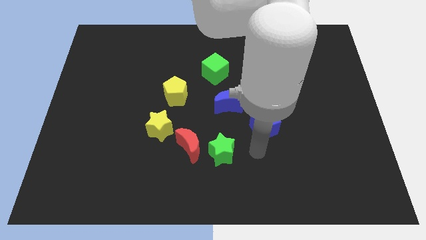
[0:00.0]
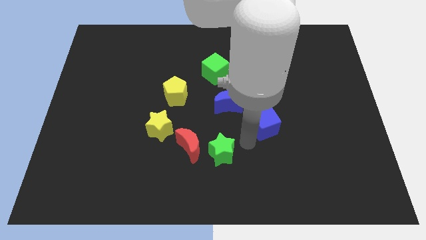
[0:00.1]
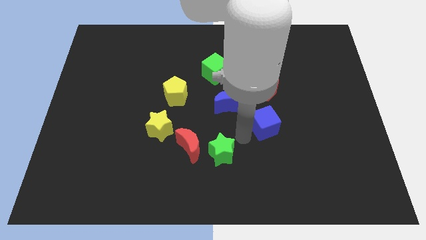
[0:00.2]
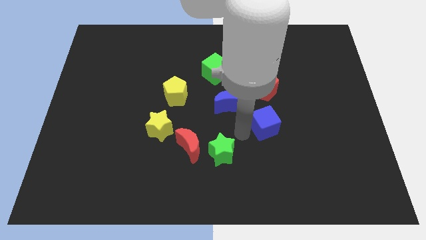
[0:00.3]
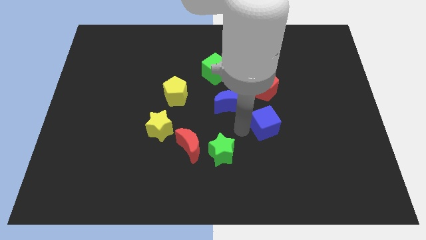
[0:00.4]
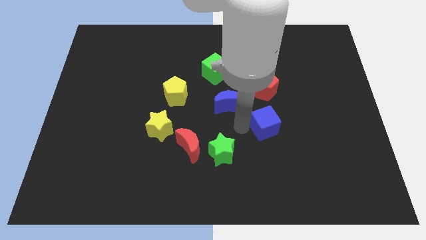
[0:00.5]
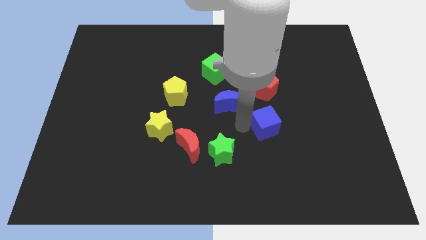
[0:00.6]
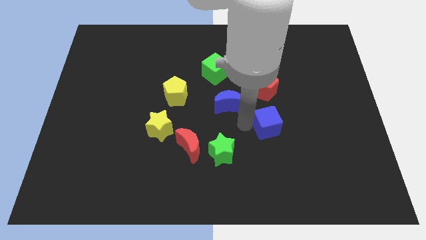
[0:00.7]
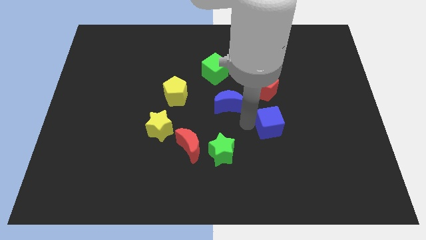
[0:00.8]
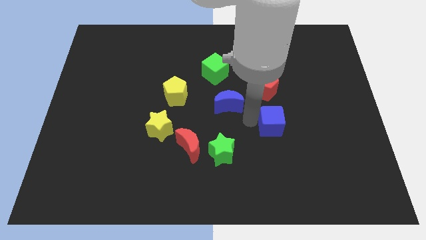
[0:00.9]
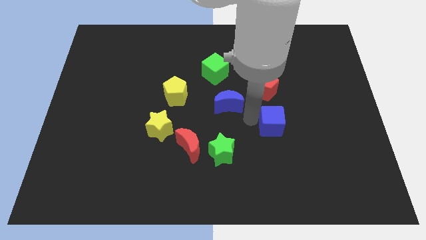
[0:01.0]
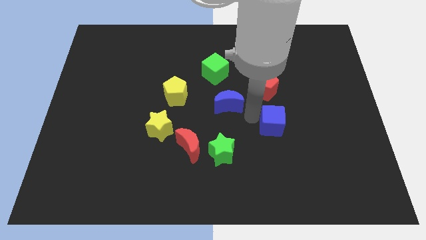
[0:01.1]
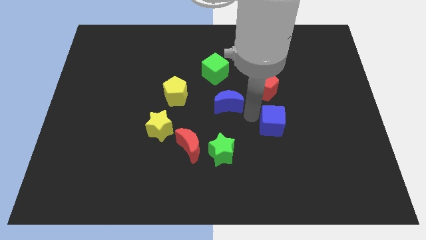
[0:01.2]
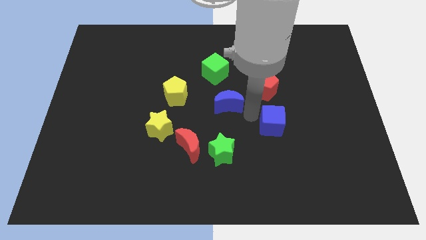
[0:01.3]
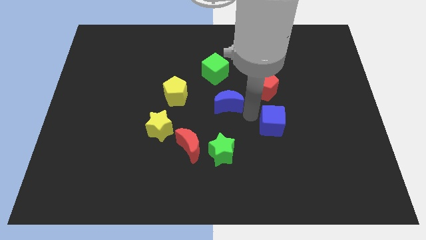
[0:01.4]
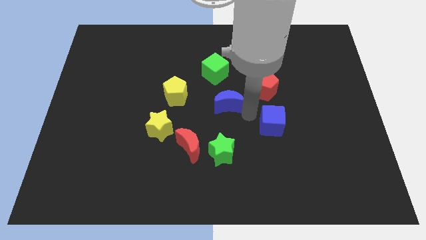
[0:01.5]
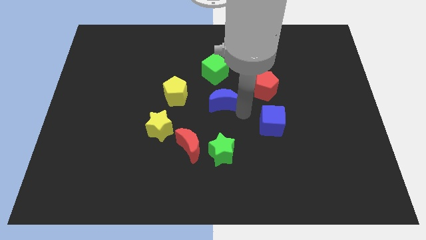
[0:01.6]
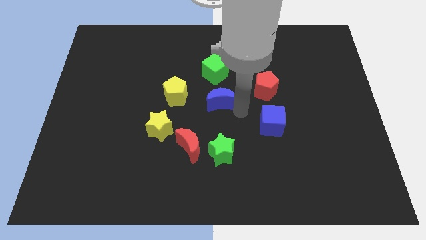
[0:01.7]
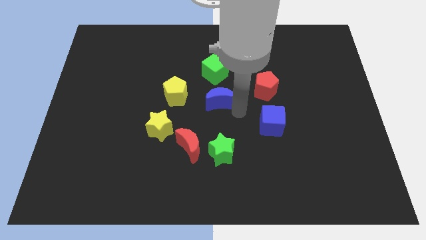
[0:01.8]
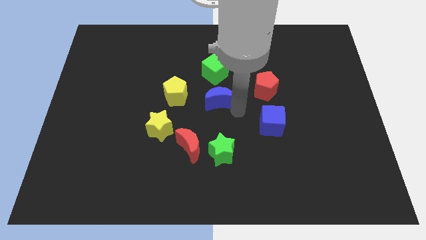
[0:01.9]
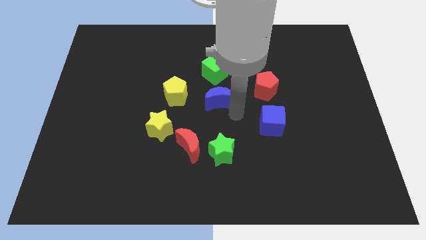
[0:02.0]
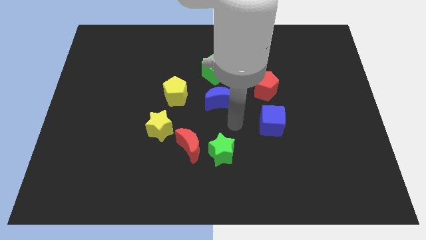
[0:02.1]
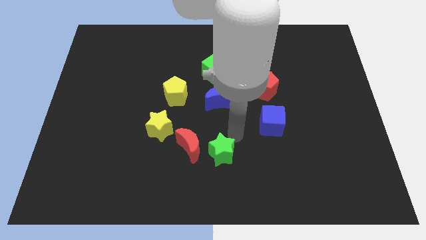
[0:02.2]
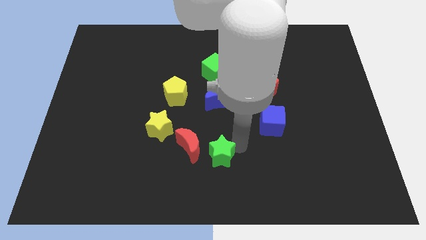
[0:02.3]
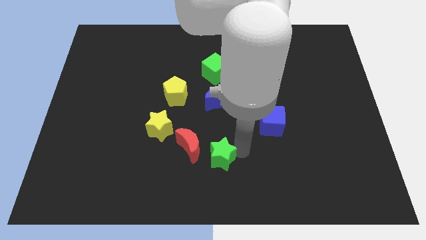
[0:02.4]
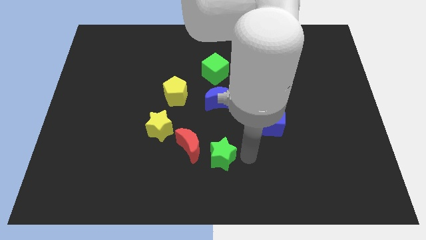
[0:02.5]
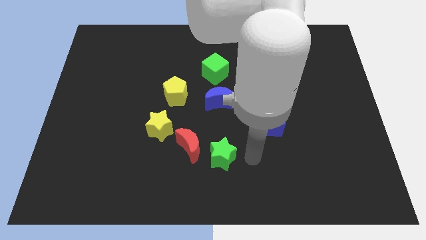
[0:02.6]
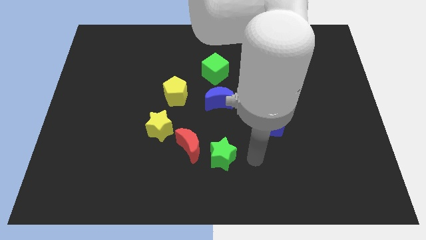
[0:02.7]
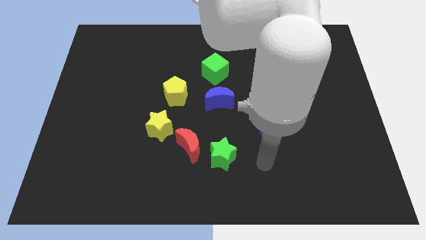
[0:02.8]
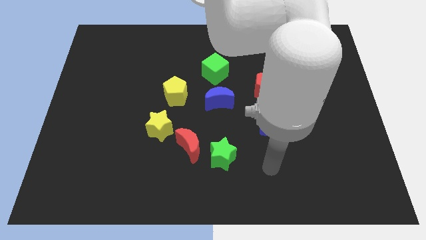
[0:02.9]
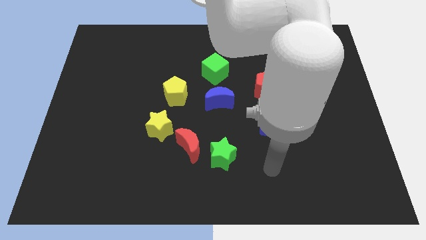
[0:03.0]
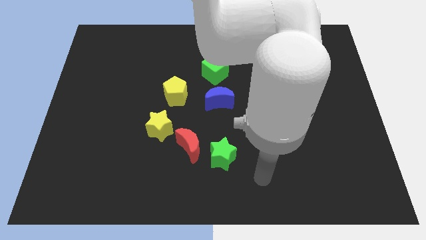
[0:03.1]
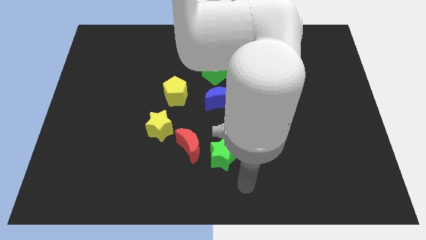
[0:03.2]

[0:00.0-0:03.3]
place your arm to the bottom right side of the green star

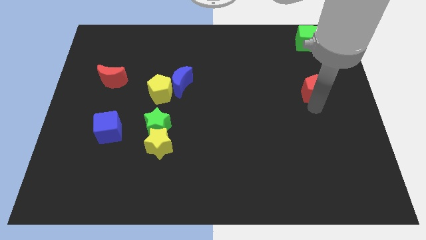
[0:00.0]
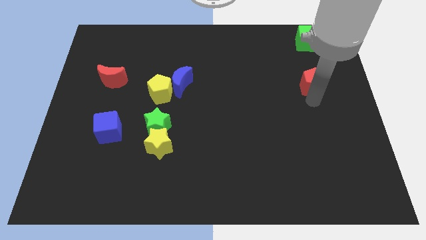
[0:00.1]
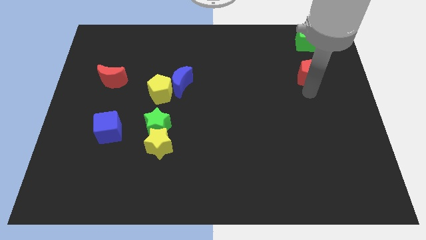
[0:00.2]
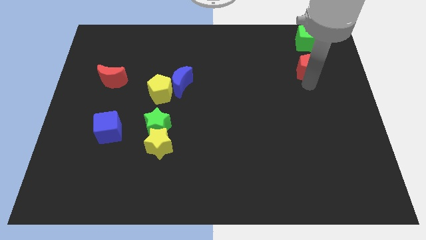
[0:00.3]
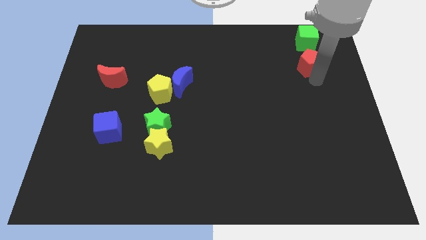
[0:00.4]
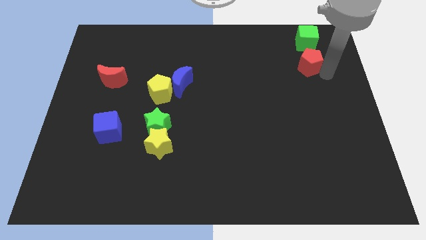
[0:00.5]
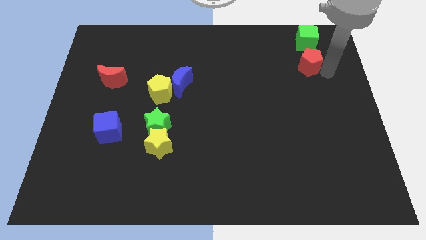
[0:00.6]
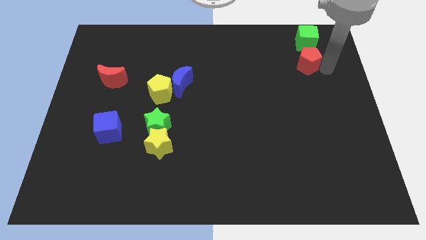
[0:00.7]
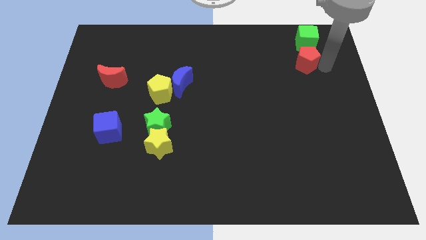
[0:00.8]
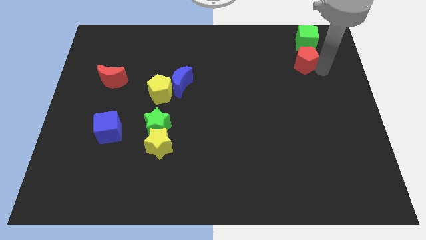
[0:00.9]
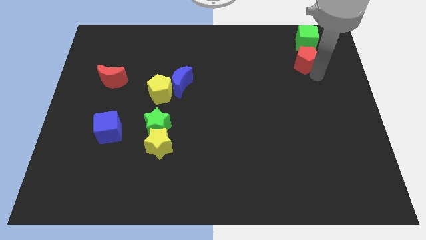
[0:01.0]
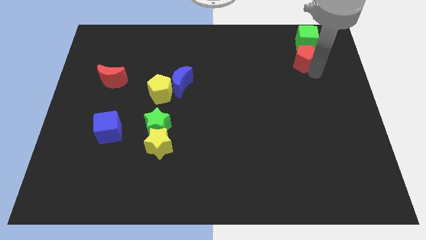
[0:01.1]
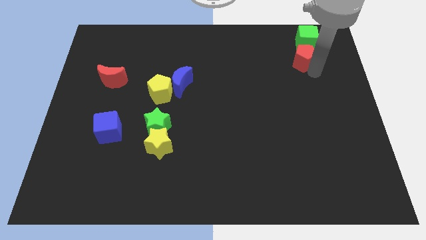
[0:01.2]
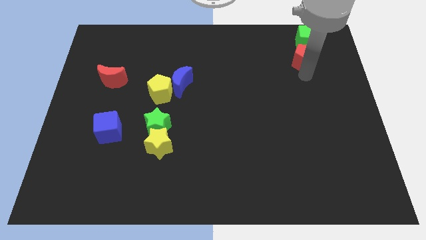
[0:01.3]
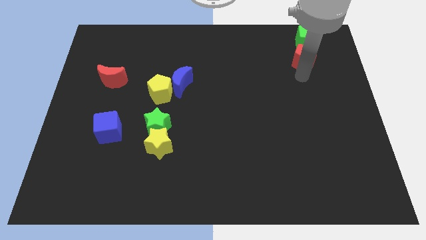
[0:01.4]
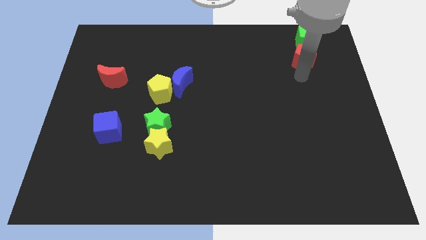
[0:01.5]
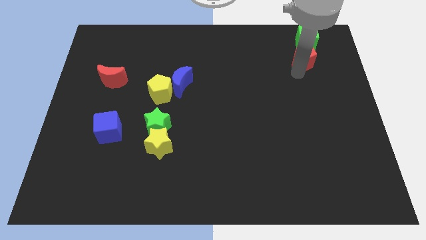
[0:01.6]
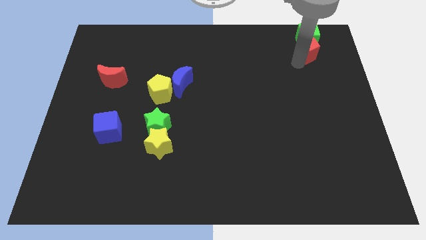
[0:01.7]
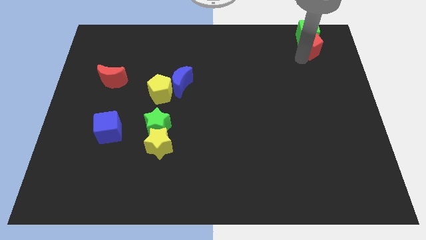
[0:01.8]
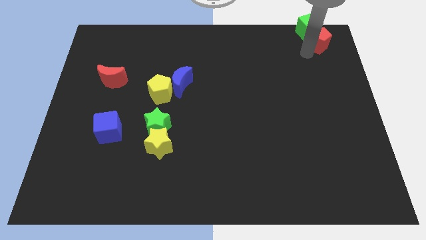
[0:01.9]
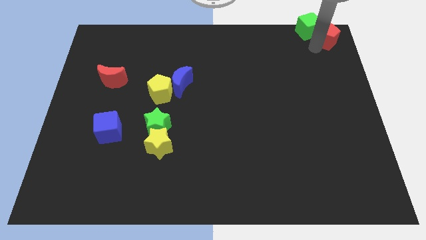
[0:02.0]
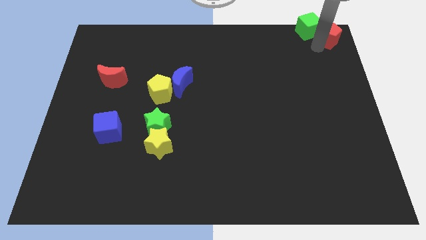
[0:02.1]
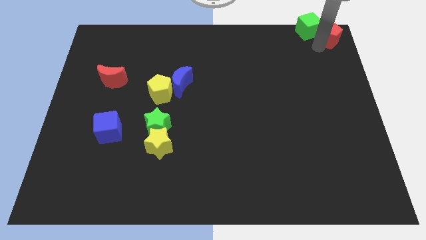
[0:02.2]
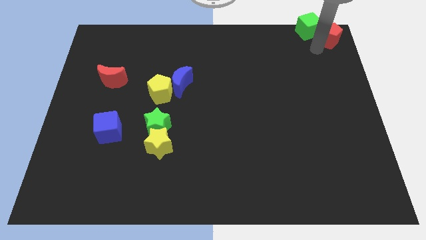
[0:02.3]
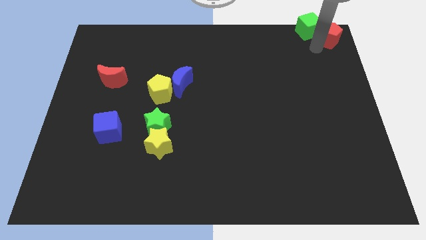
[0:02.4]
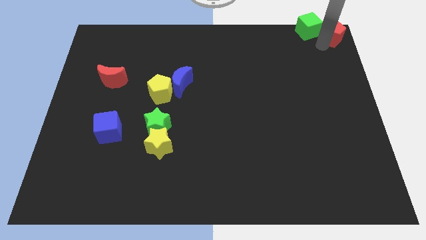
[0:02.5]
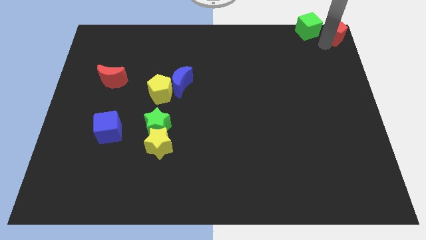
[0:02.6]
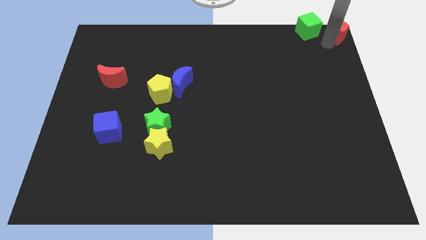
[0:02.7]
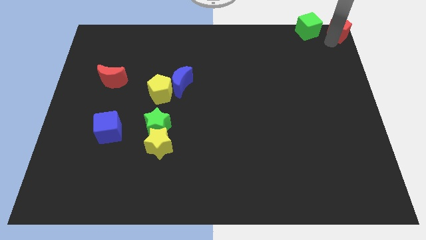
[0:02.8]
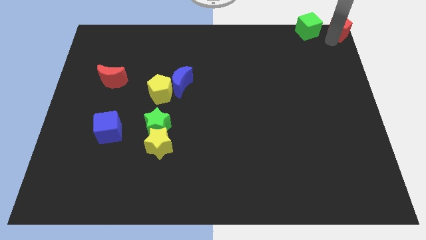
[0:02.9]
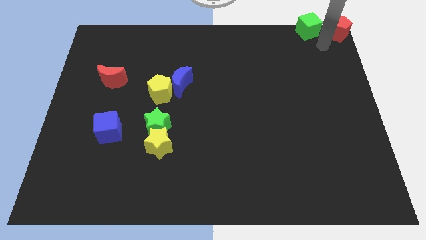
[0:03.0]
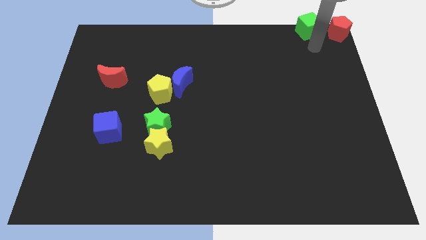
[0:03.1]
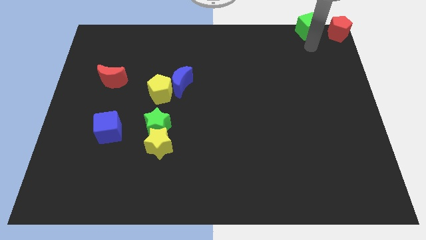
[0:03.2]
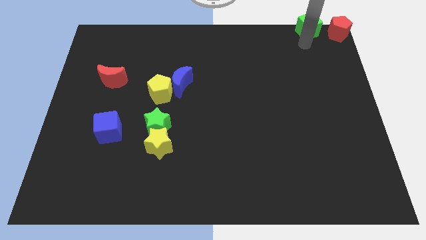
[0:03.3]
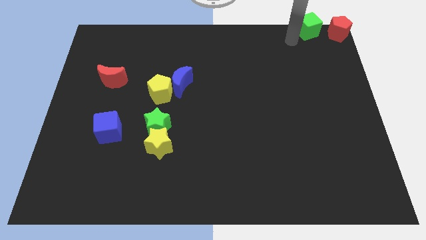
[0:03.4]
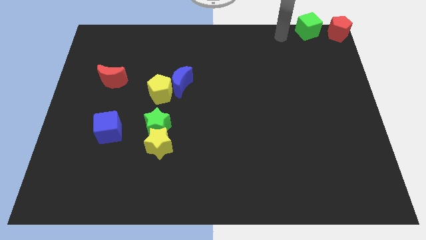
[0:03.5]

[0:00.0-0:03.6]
move the red pentagon to the top right corner of the board

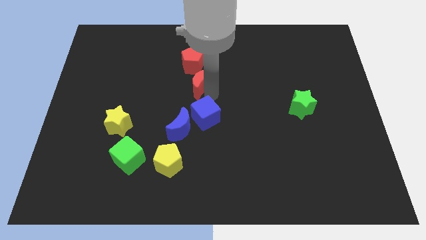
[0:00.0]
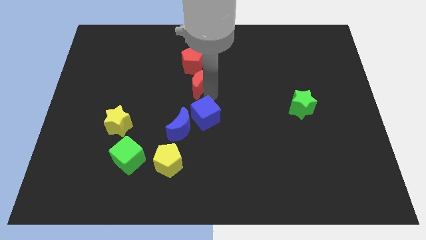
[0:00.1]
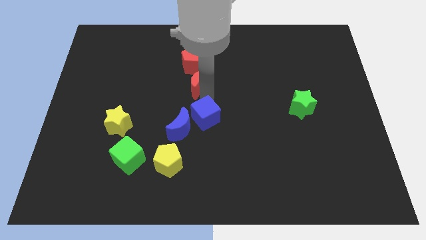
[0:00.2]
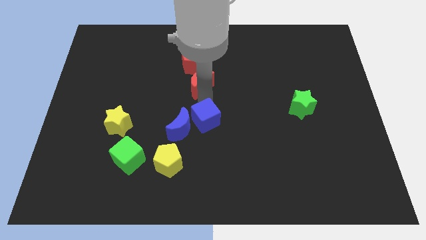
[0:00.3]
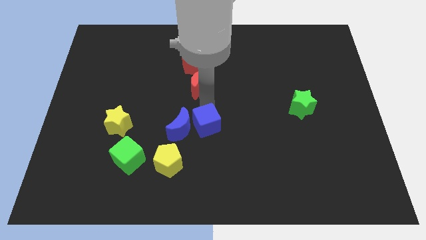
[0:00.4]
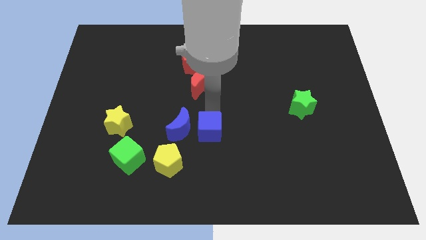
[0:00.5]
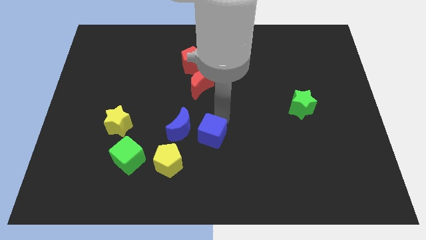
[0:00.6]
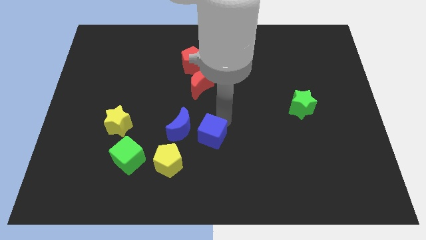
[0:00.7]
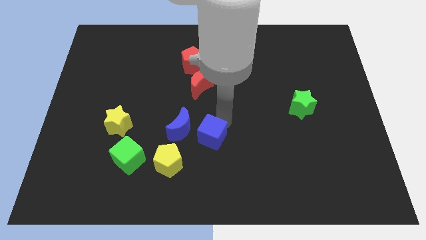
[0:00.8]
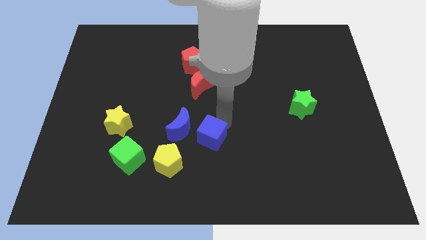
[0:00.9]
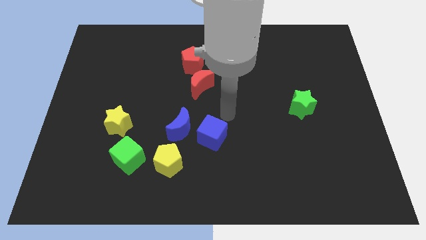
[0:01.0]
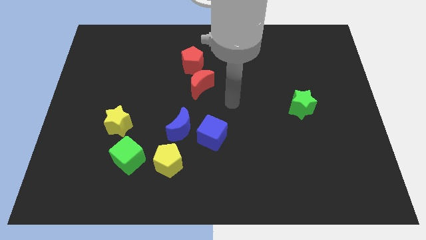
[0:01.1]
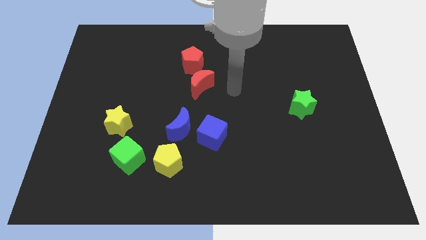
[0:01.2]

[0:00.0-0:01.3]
place the blue cube to the right of the blue moon

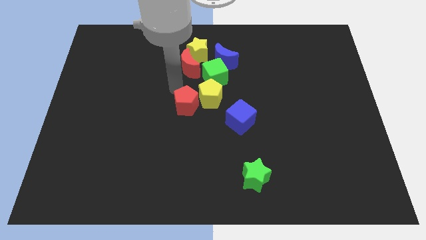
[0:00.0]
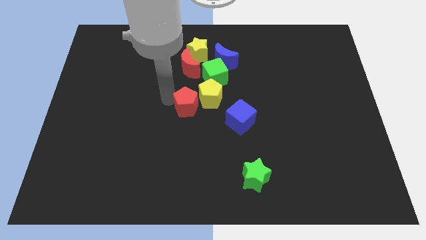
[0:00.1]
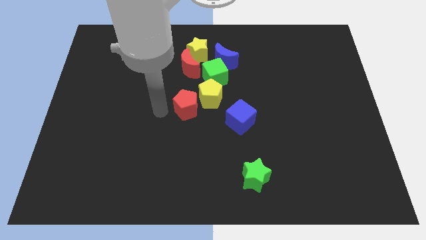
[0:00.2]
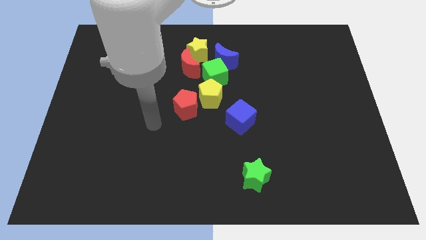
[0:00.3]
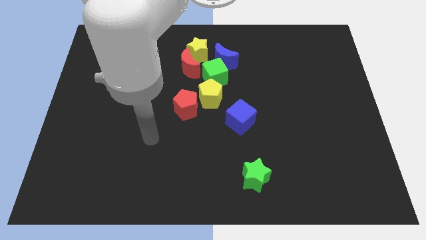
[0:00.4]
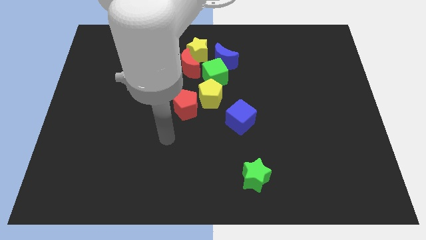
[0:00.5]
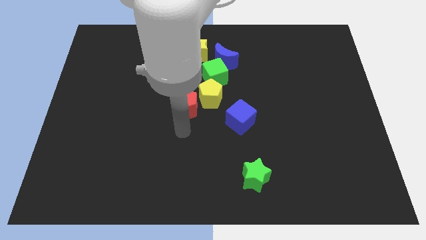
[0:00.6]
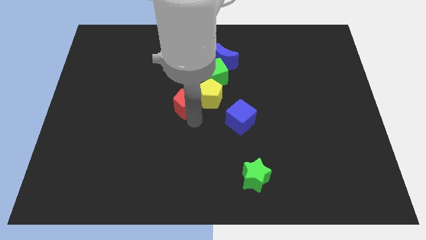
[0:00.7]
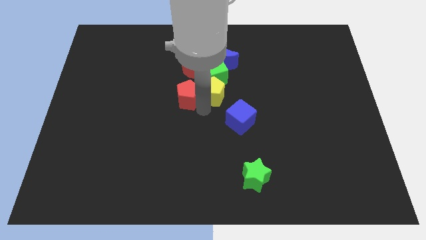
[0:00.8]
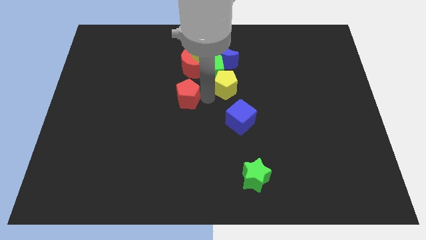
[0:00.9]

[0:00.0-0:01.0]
move your arm towards the red pentagon
